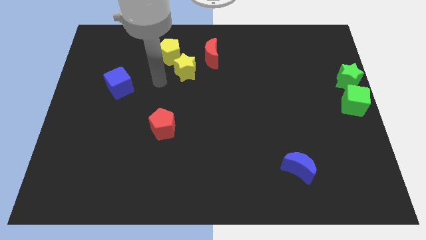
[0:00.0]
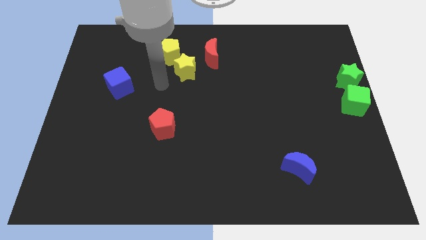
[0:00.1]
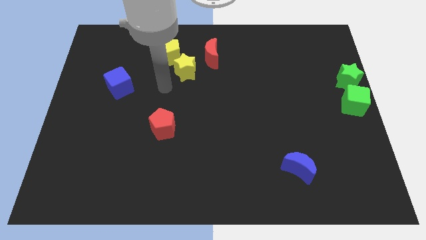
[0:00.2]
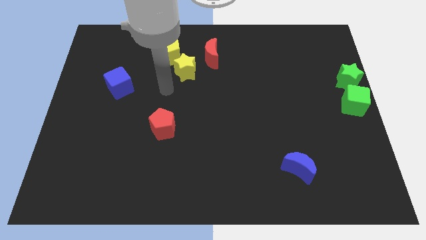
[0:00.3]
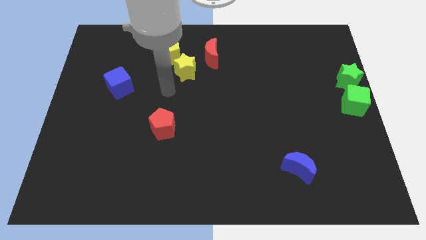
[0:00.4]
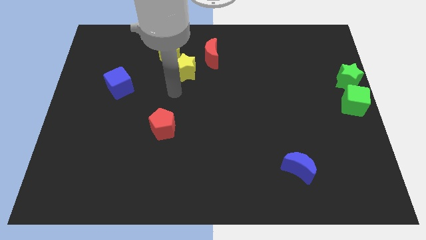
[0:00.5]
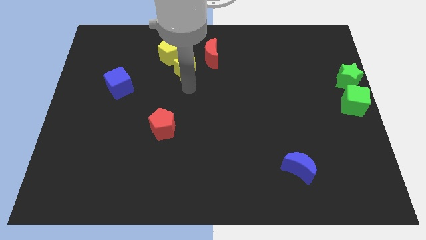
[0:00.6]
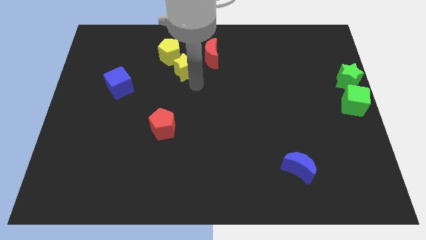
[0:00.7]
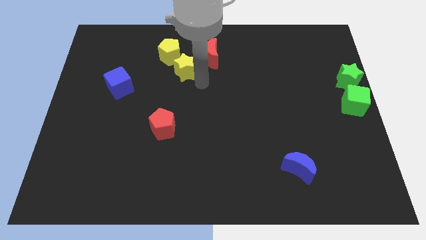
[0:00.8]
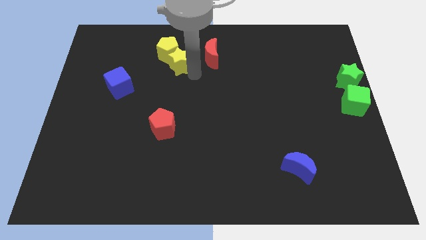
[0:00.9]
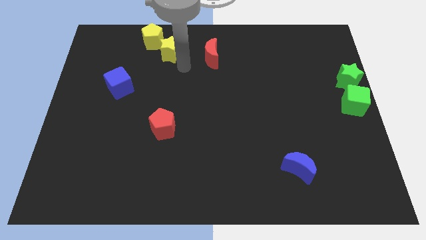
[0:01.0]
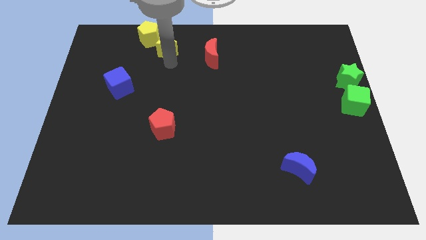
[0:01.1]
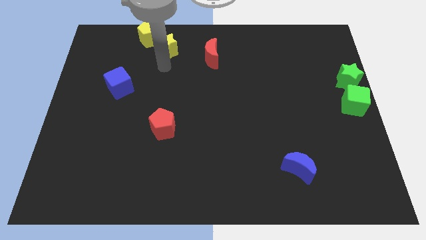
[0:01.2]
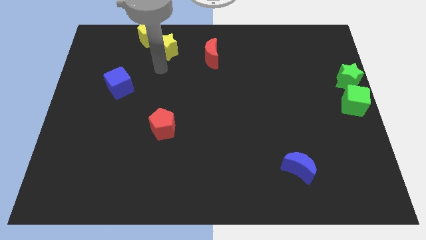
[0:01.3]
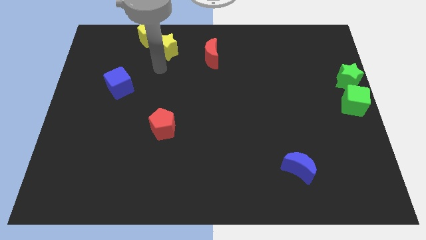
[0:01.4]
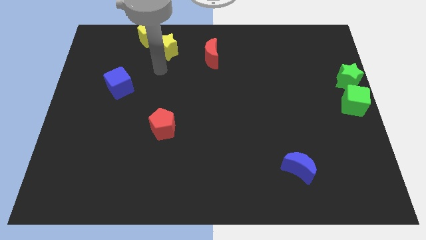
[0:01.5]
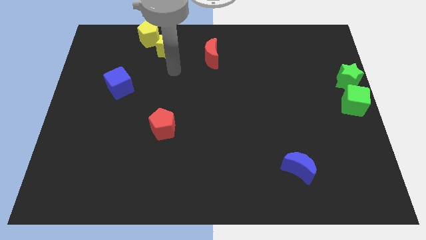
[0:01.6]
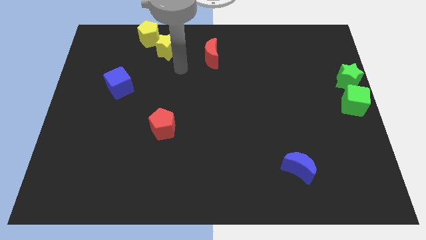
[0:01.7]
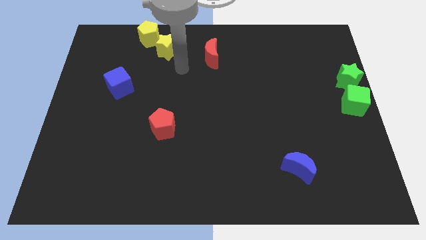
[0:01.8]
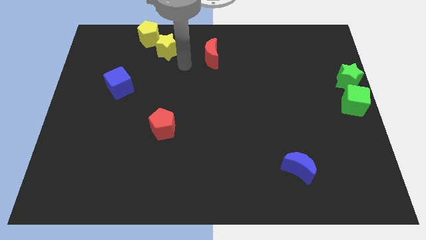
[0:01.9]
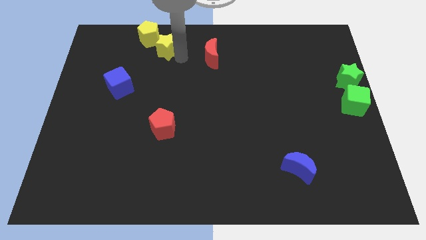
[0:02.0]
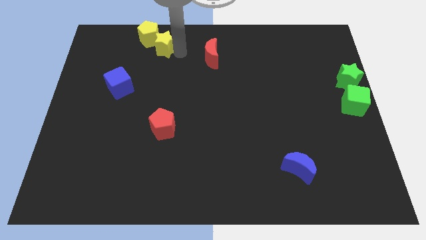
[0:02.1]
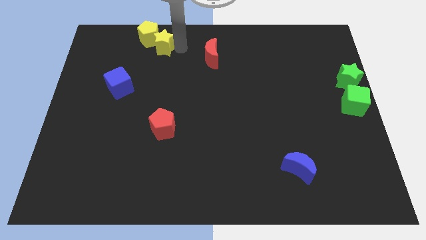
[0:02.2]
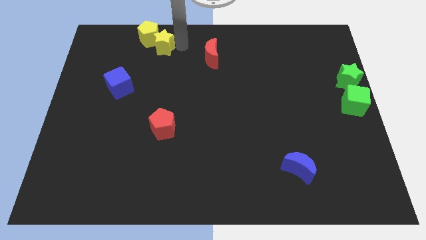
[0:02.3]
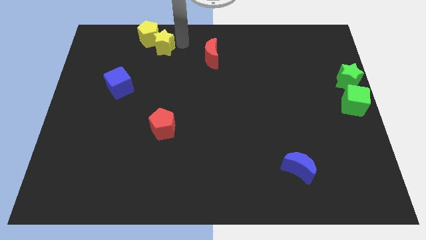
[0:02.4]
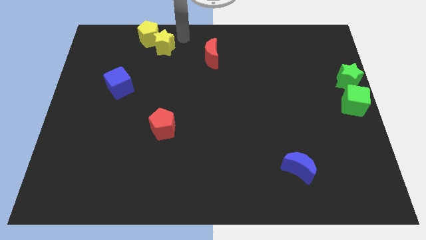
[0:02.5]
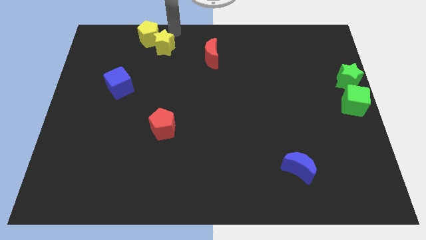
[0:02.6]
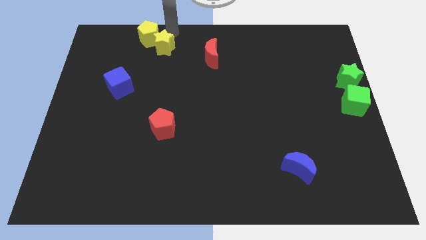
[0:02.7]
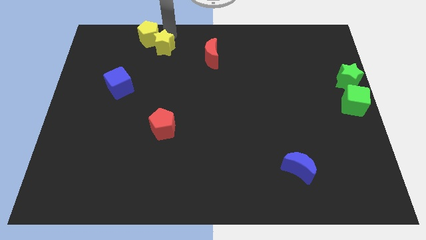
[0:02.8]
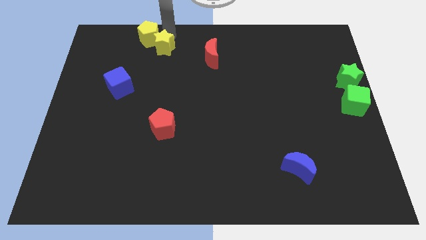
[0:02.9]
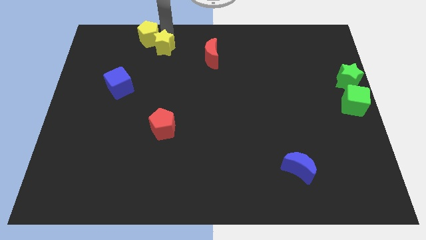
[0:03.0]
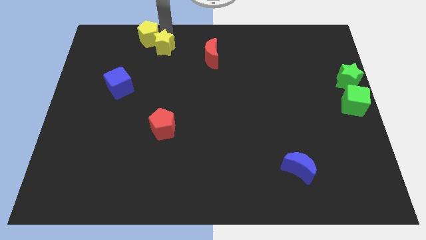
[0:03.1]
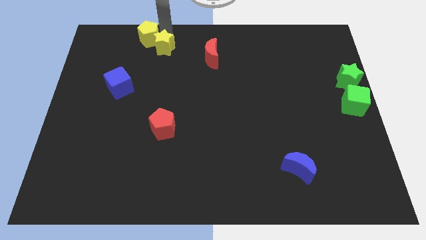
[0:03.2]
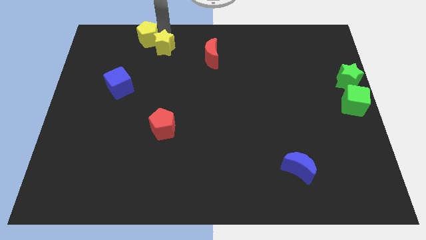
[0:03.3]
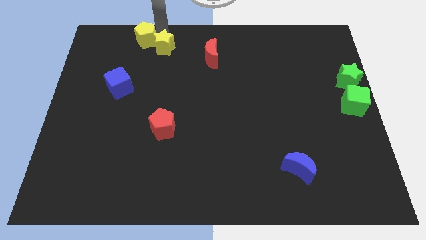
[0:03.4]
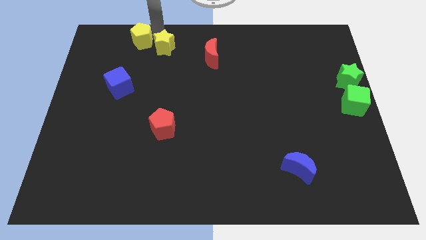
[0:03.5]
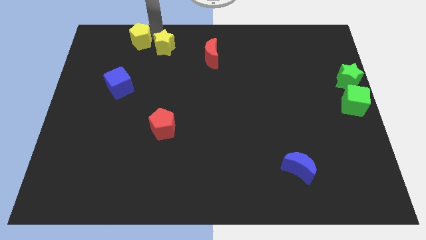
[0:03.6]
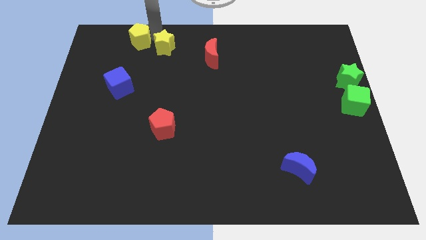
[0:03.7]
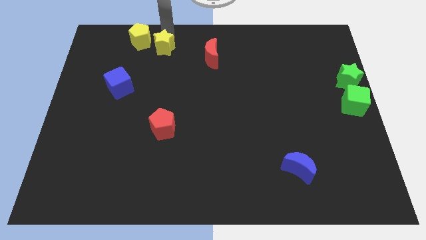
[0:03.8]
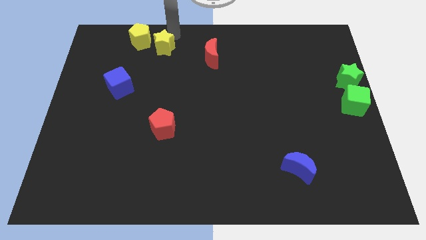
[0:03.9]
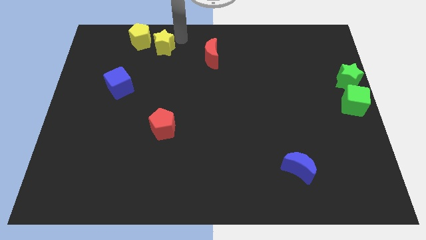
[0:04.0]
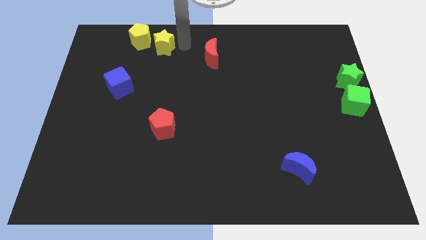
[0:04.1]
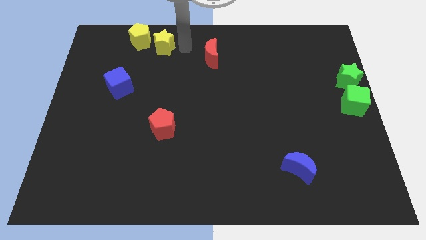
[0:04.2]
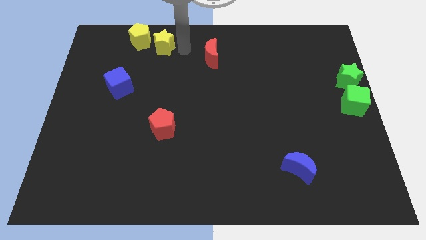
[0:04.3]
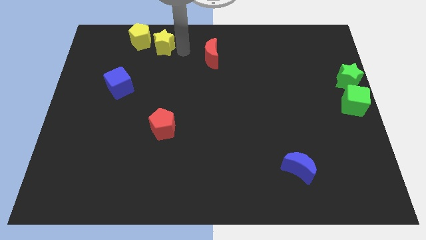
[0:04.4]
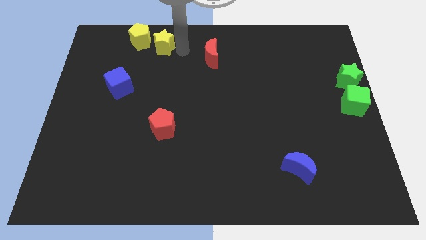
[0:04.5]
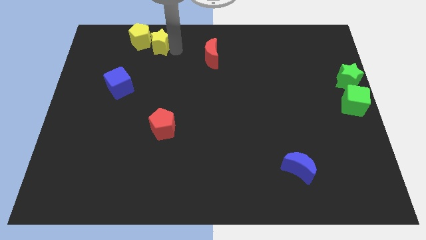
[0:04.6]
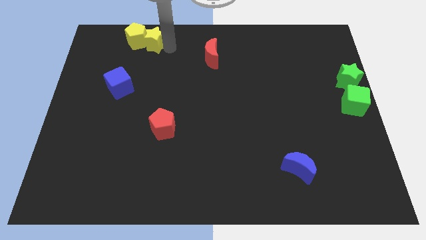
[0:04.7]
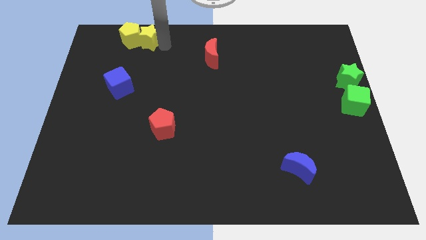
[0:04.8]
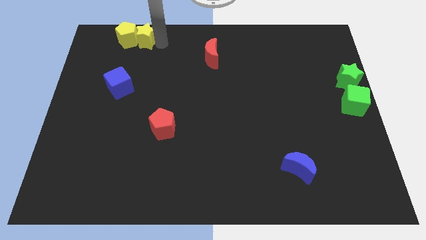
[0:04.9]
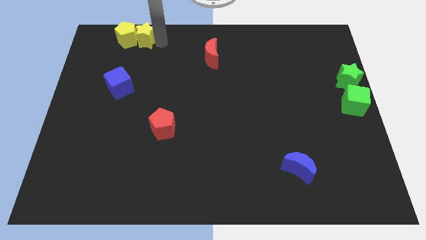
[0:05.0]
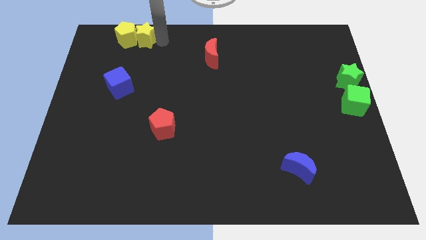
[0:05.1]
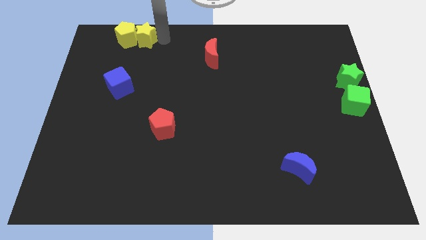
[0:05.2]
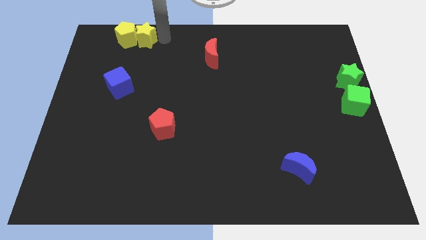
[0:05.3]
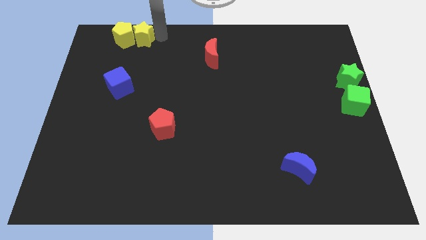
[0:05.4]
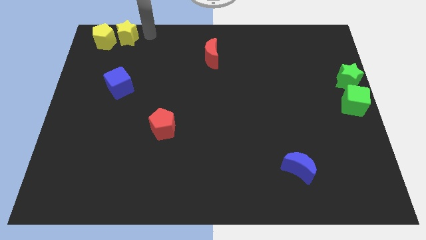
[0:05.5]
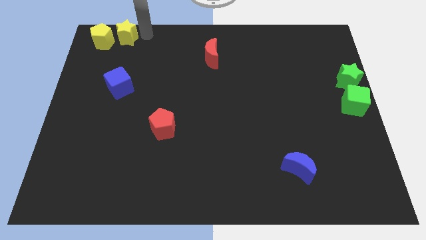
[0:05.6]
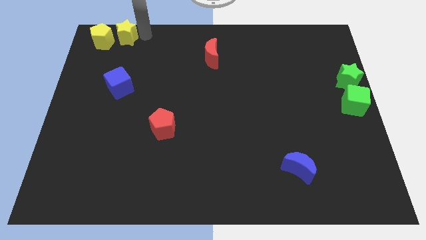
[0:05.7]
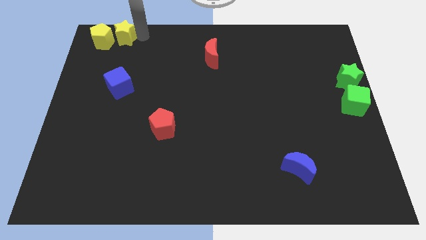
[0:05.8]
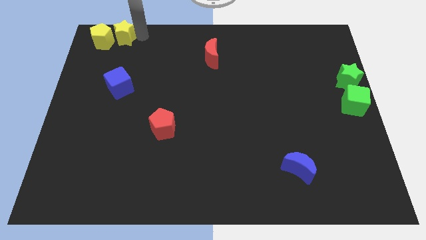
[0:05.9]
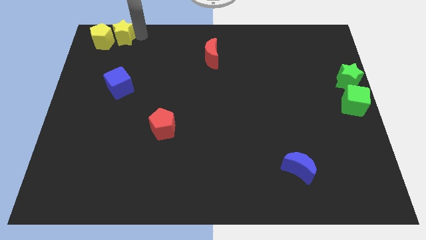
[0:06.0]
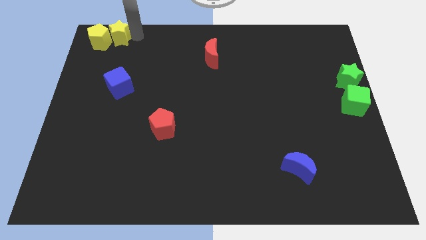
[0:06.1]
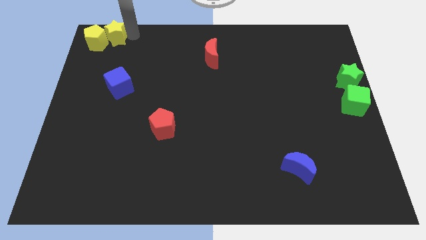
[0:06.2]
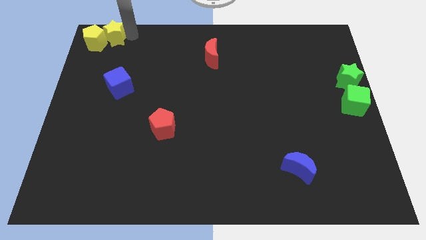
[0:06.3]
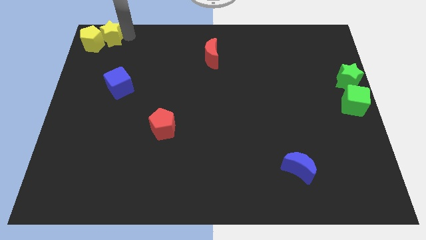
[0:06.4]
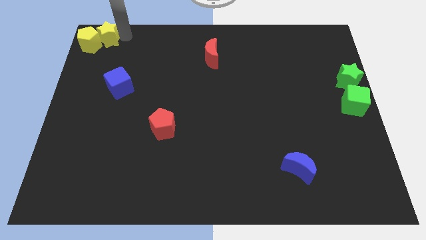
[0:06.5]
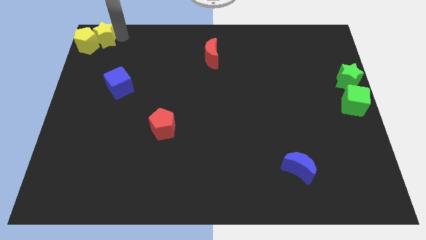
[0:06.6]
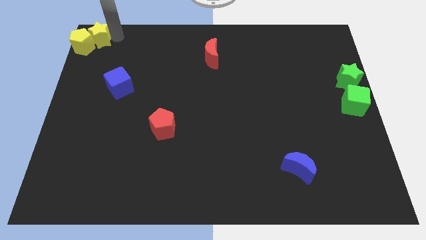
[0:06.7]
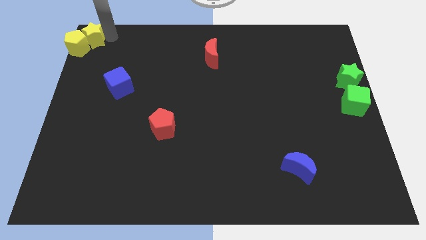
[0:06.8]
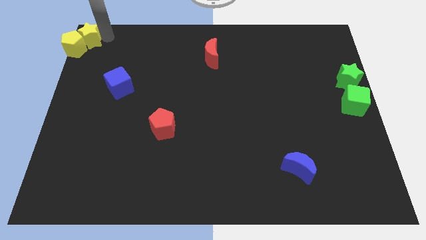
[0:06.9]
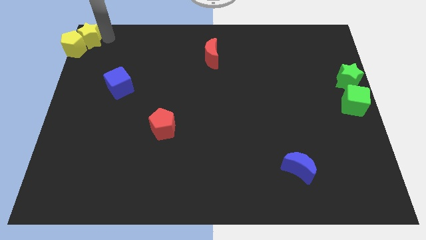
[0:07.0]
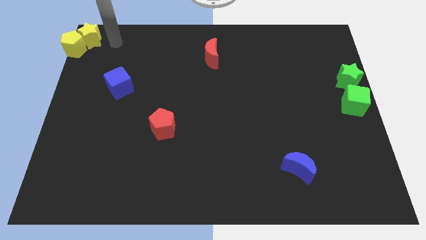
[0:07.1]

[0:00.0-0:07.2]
place the yellow pentagon and yellow star at the top left corner of the board

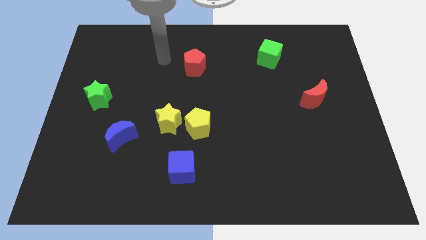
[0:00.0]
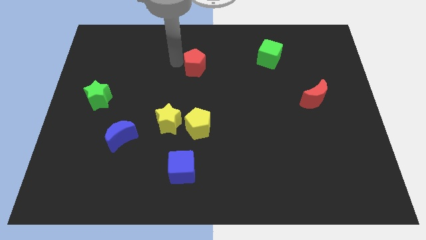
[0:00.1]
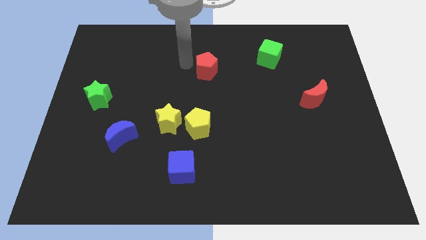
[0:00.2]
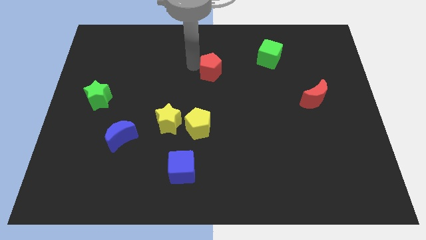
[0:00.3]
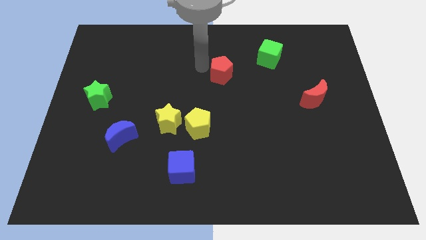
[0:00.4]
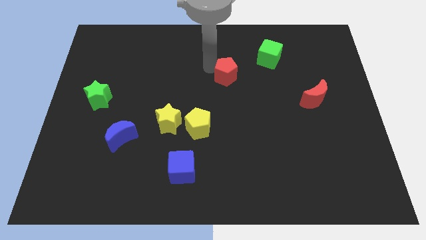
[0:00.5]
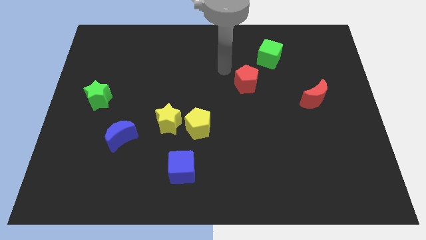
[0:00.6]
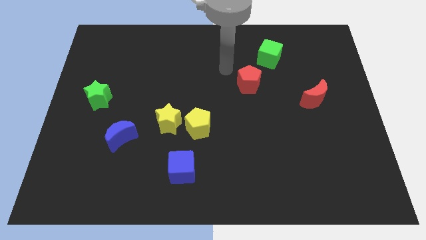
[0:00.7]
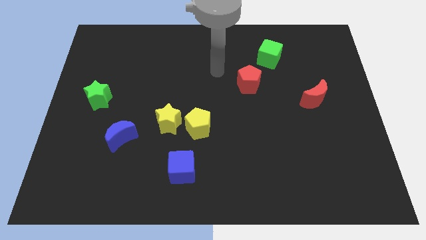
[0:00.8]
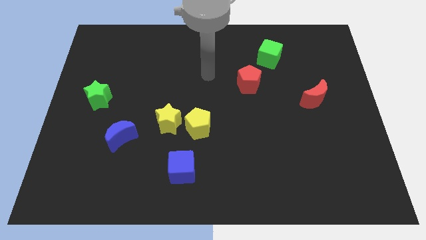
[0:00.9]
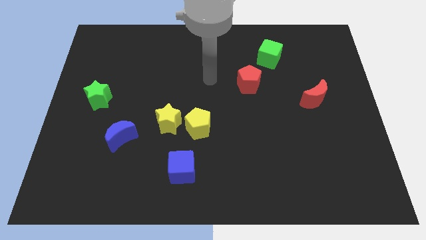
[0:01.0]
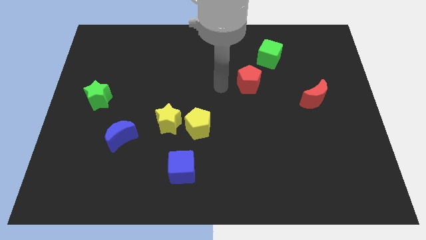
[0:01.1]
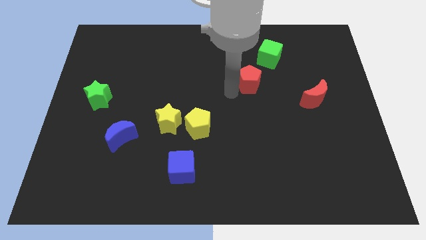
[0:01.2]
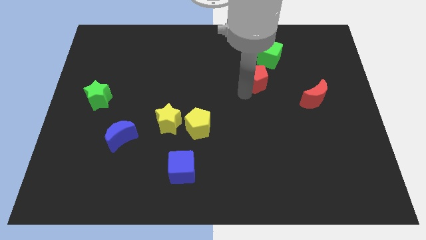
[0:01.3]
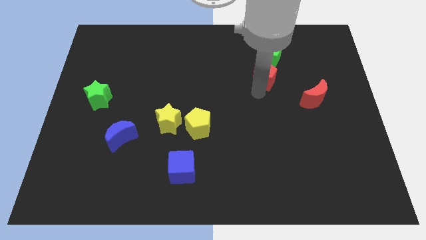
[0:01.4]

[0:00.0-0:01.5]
place the red pentagon below the green cube

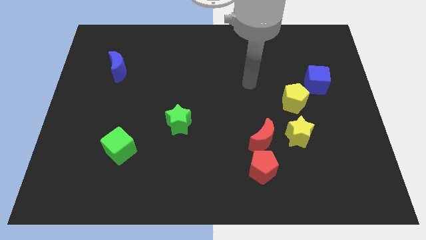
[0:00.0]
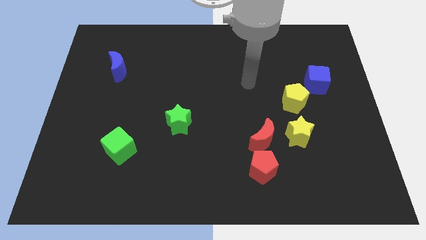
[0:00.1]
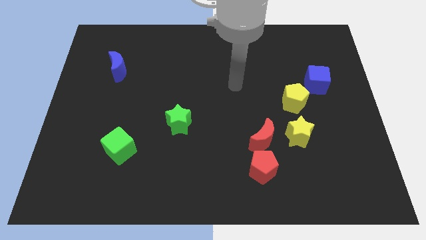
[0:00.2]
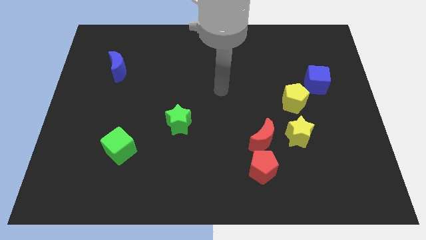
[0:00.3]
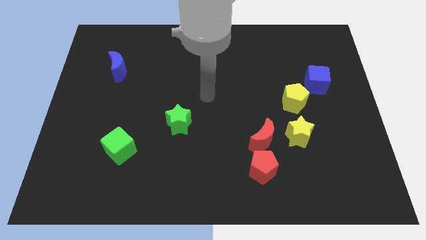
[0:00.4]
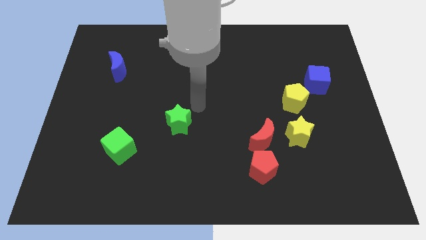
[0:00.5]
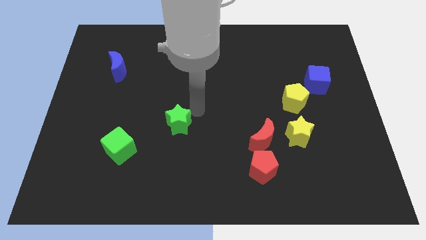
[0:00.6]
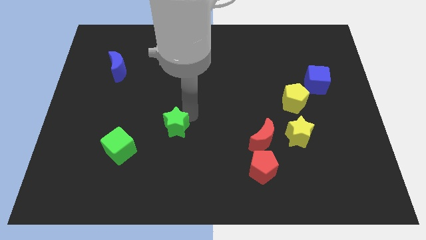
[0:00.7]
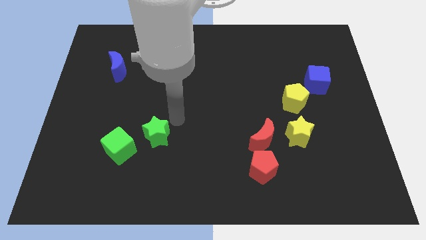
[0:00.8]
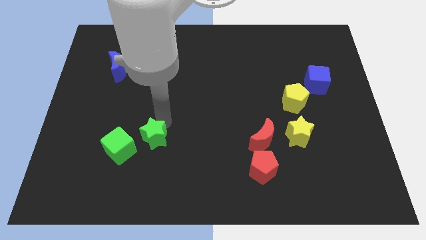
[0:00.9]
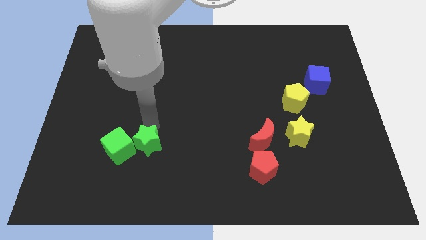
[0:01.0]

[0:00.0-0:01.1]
push the green star into green cube
